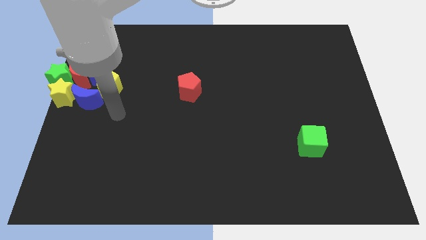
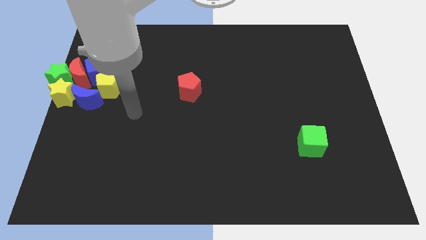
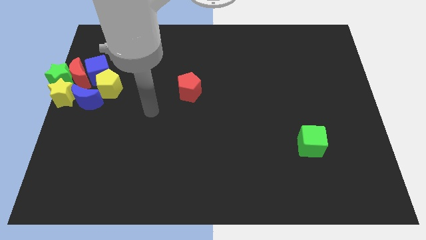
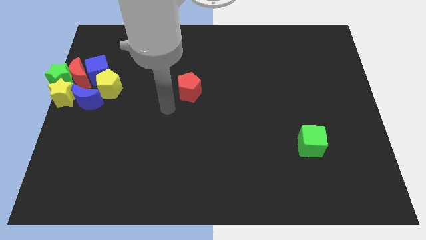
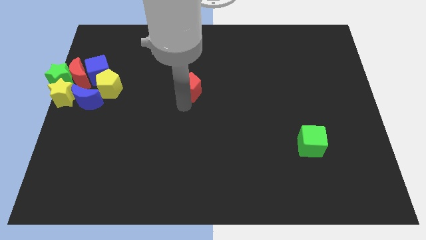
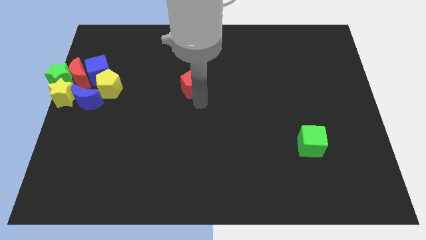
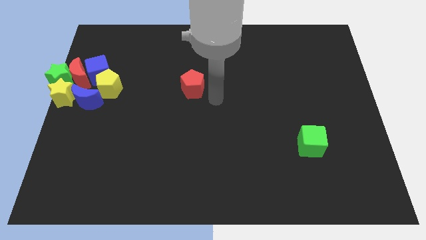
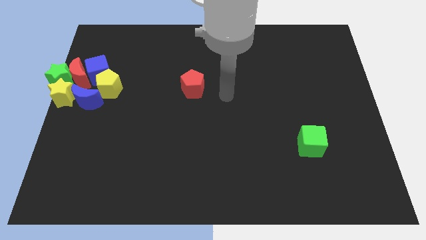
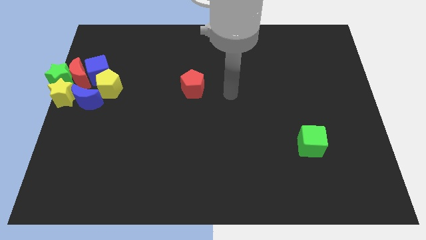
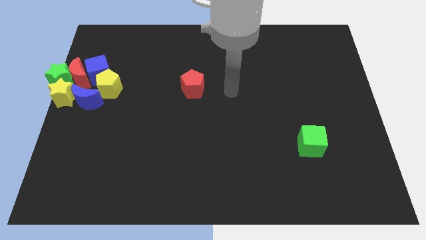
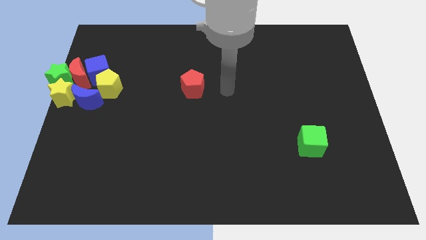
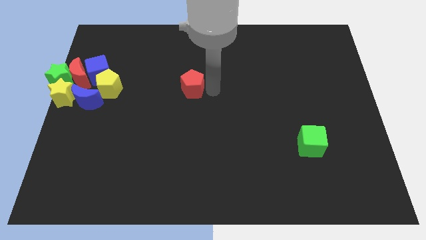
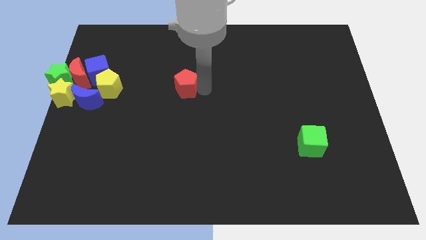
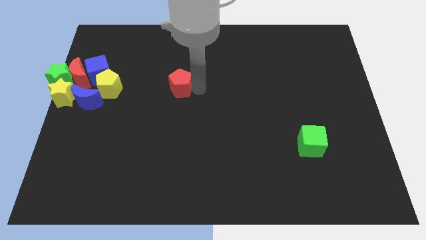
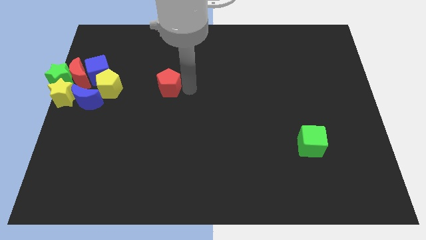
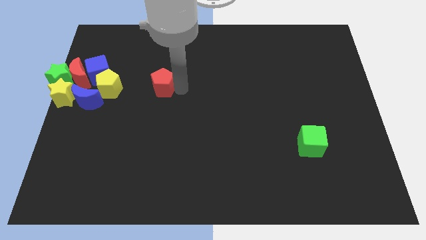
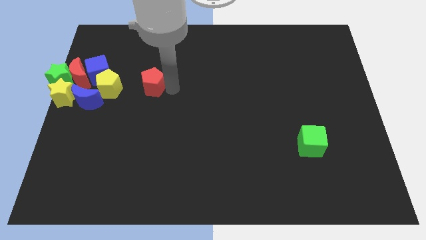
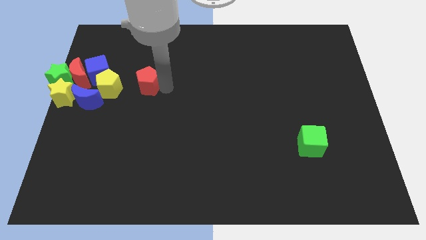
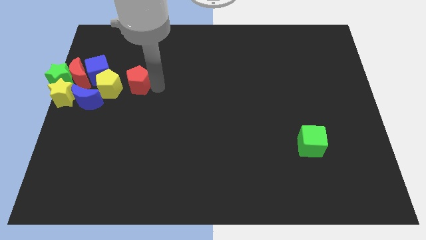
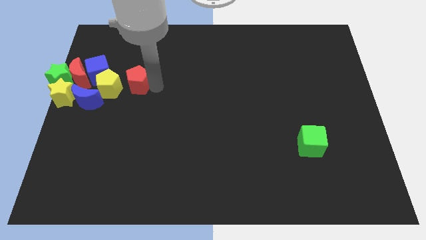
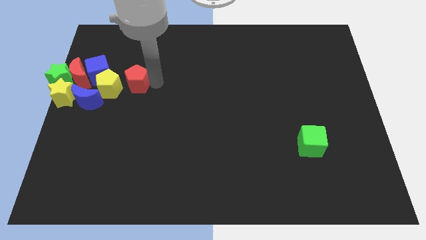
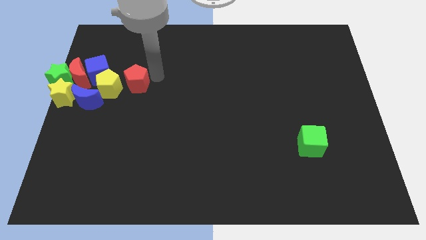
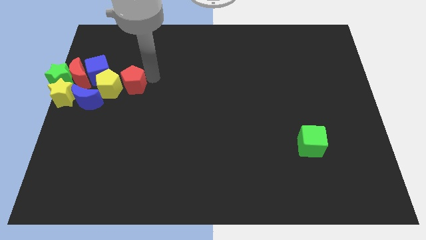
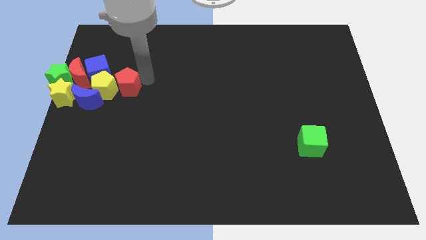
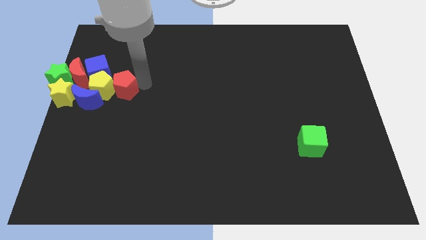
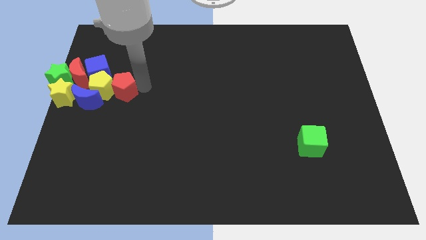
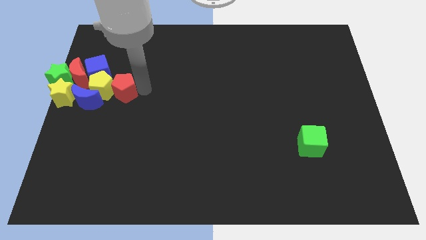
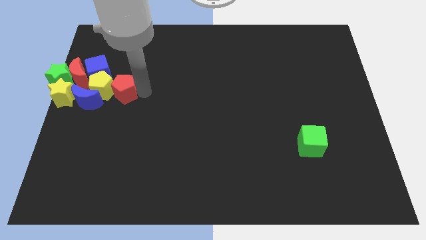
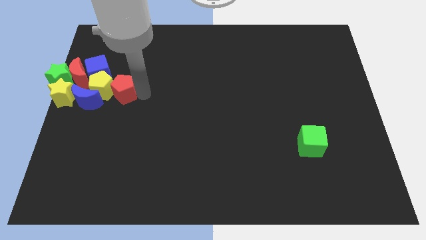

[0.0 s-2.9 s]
push the red pentagon into the yellow pentagon

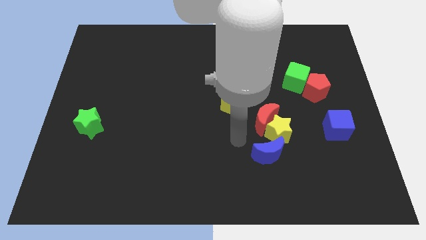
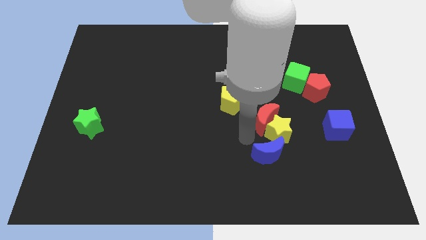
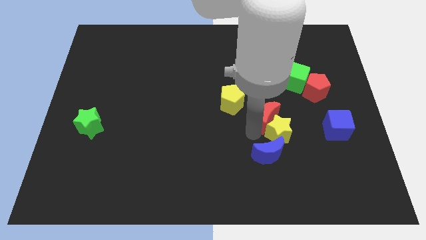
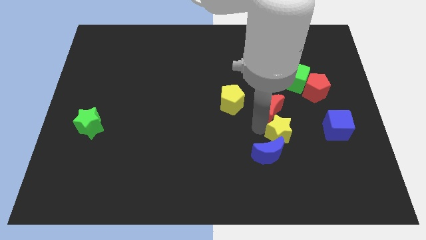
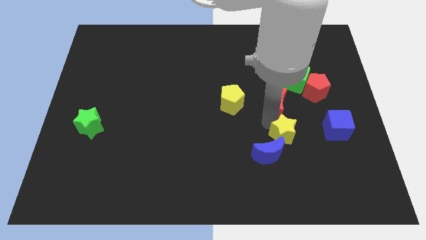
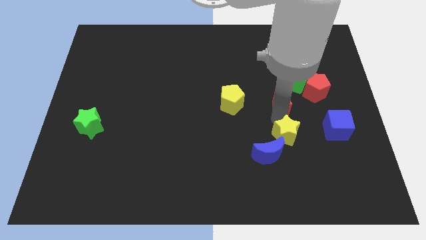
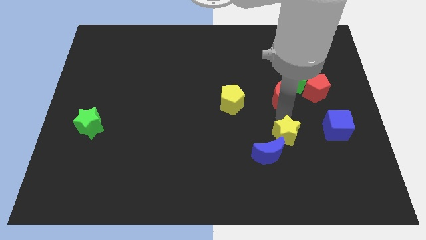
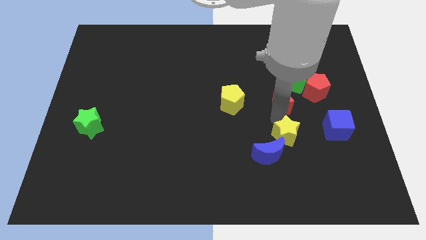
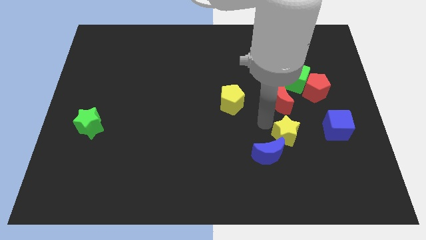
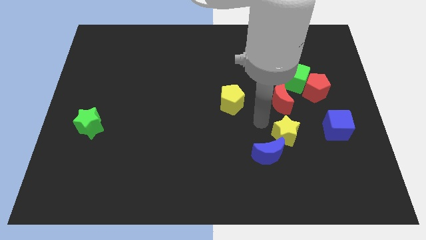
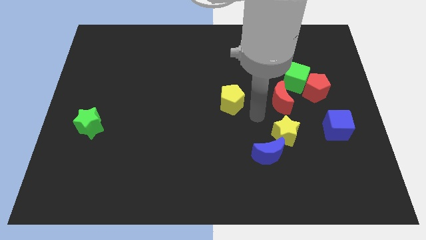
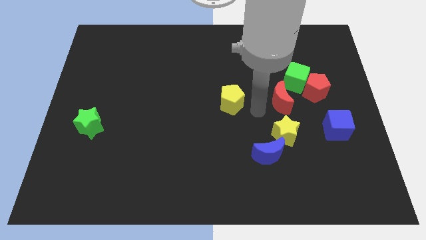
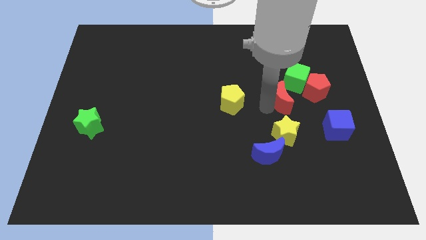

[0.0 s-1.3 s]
separate the red crescent from the yellow star

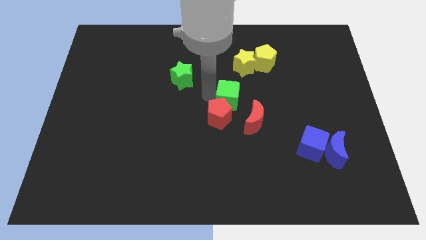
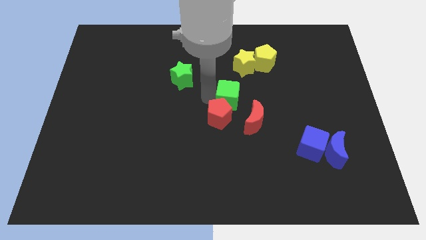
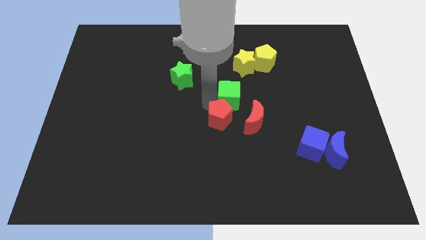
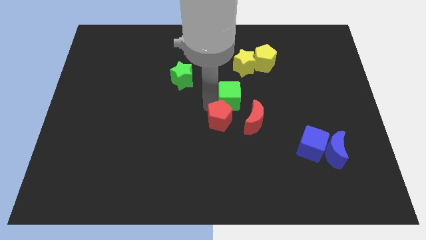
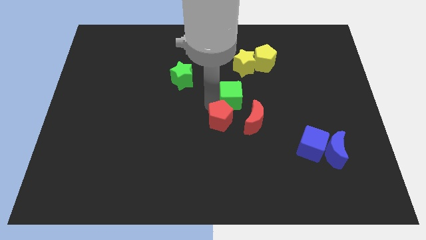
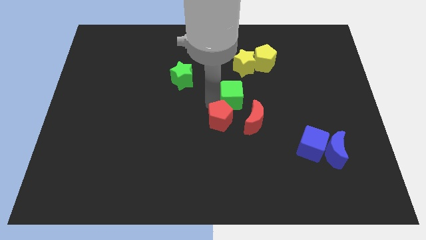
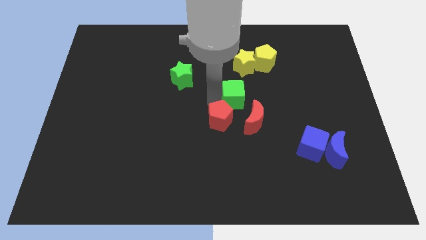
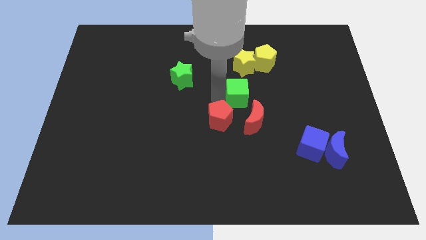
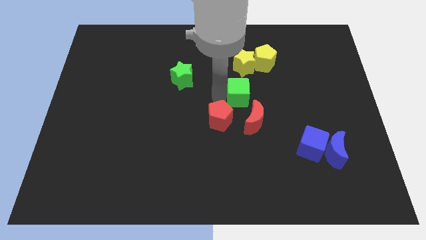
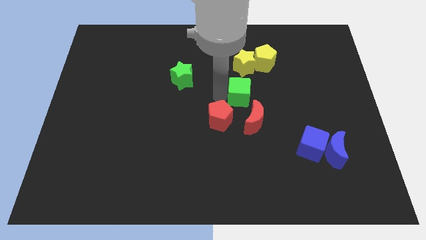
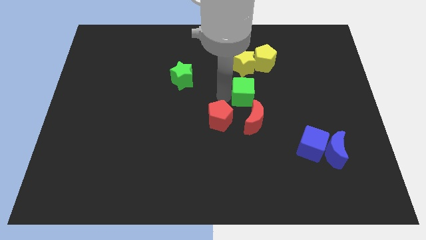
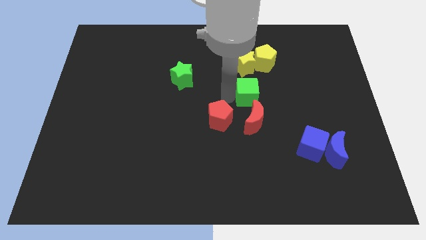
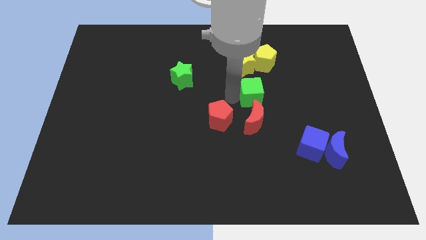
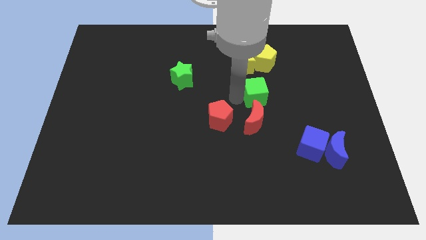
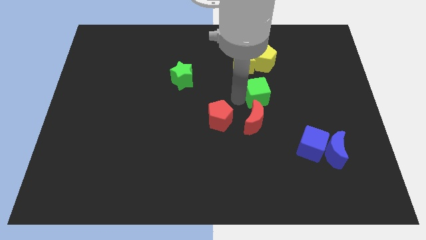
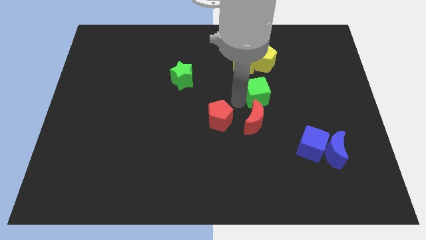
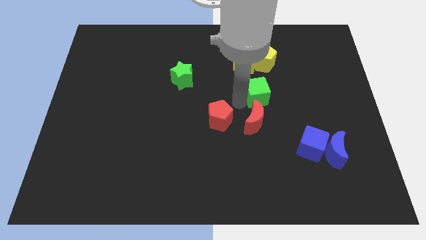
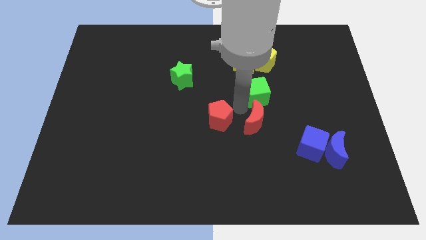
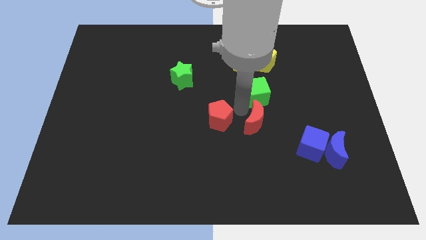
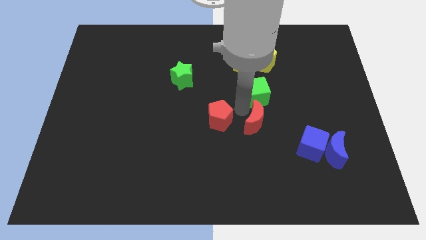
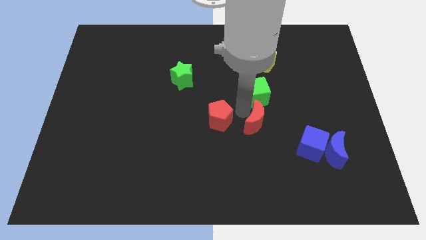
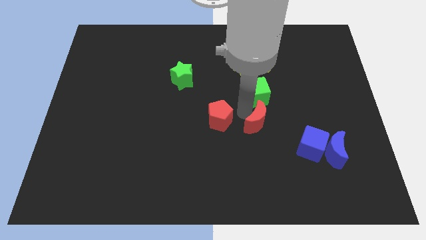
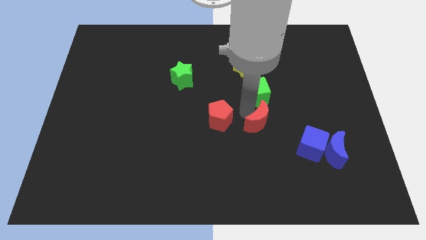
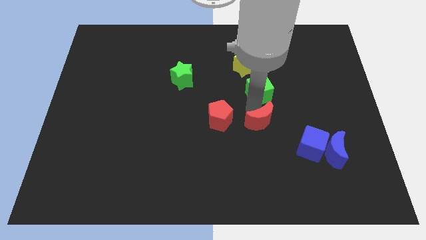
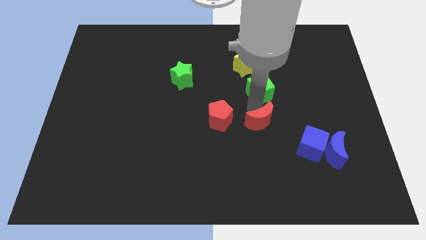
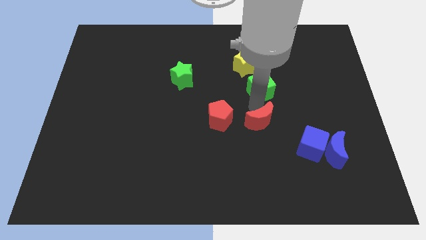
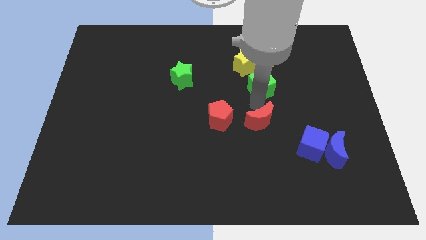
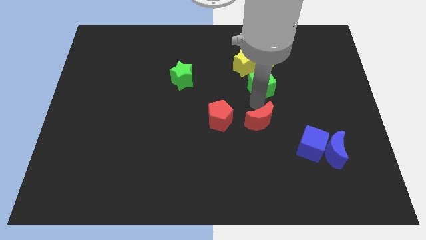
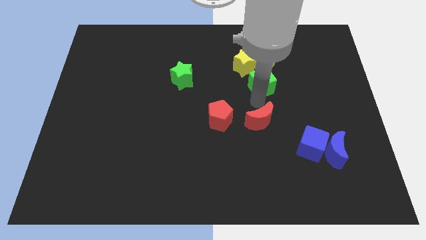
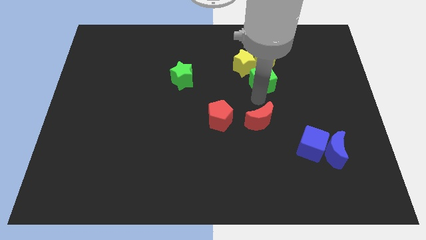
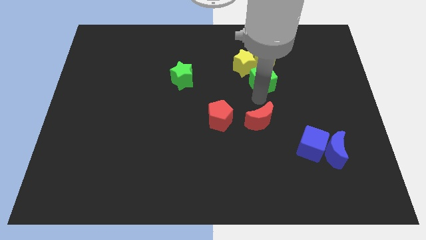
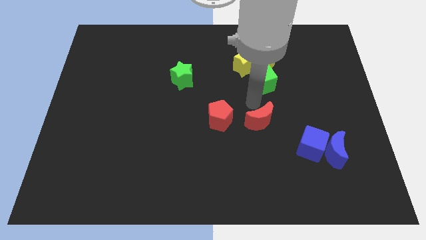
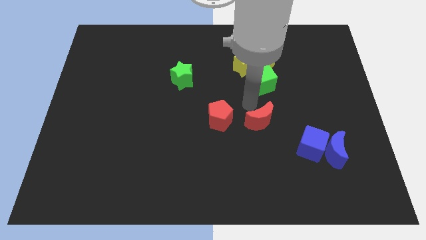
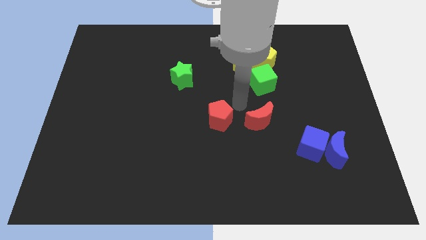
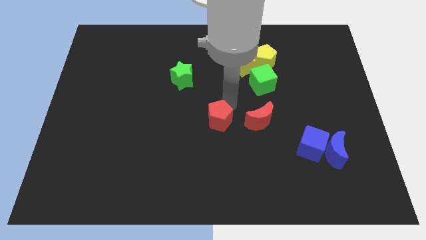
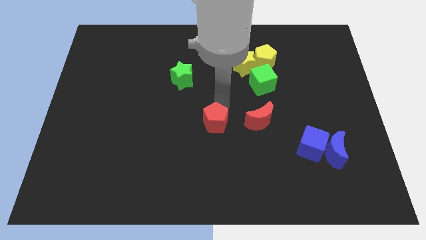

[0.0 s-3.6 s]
place green cube at the bottom of yellow star

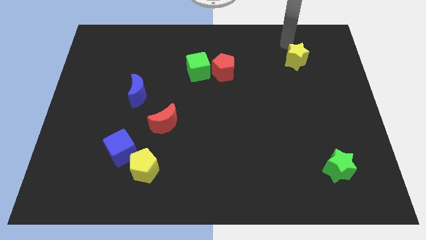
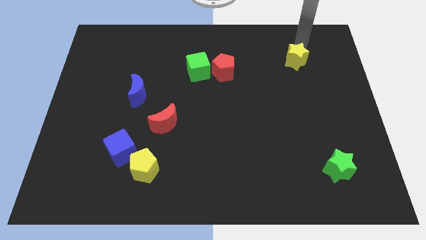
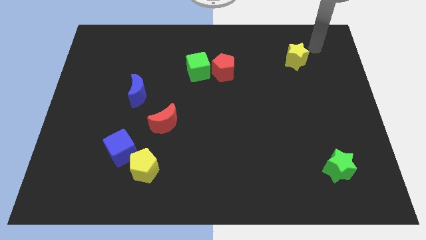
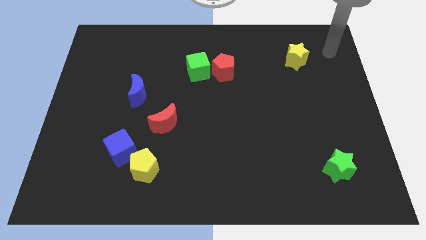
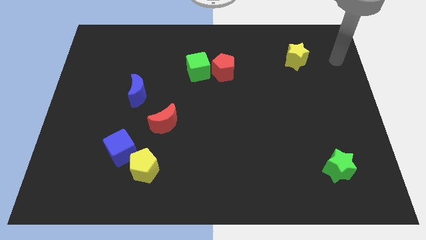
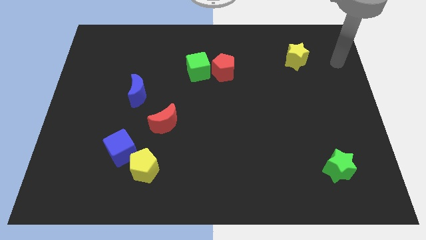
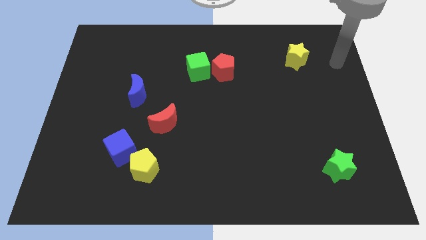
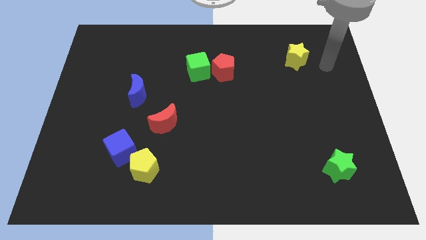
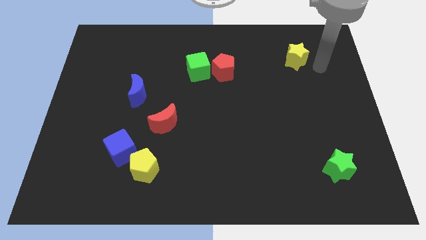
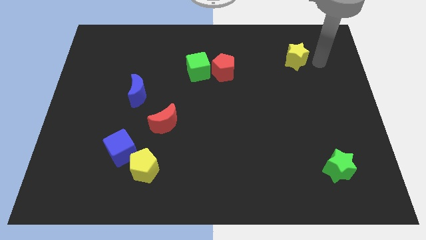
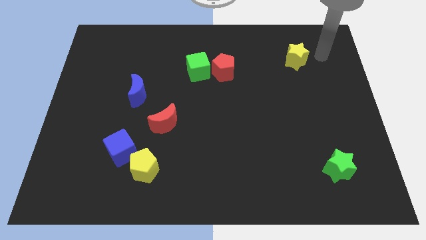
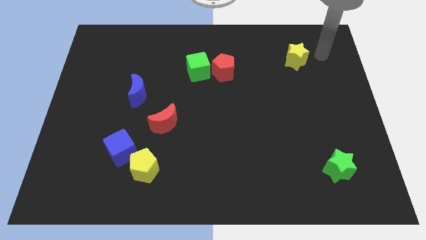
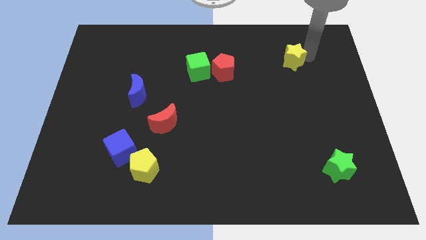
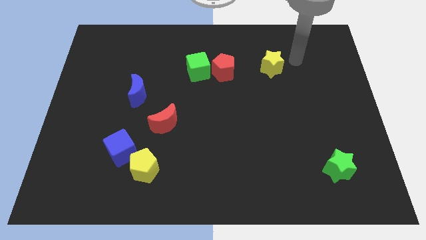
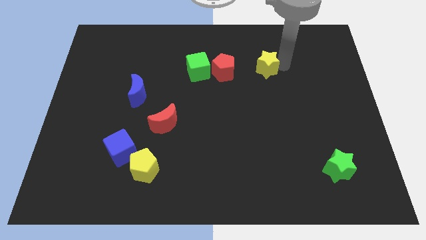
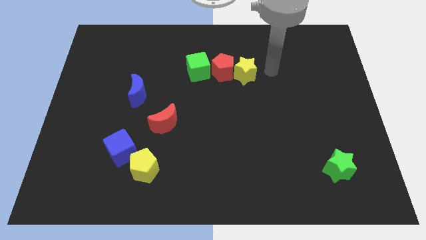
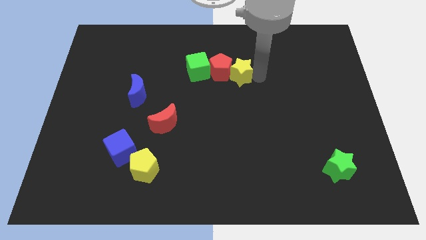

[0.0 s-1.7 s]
move the yellow star into the red pentagon
